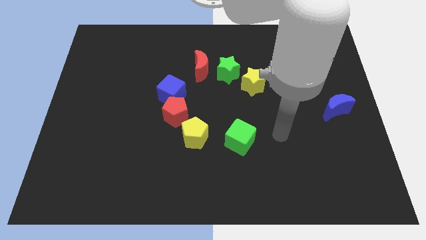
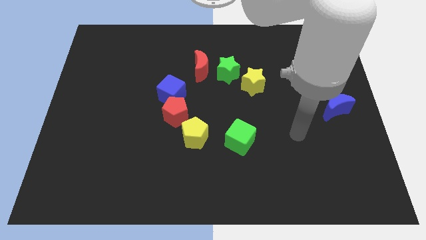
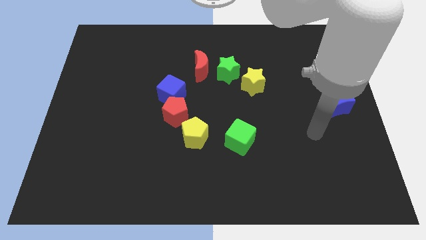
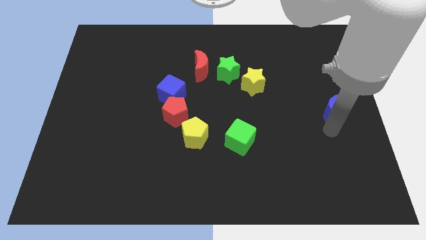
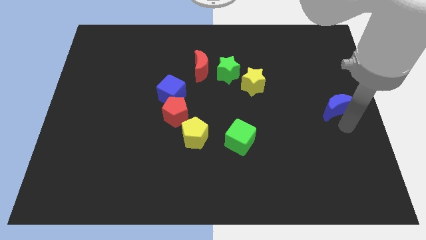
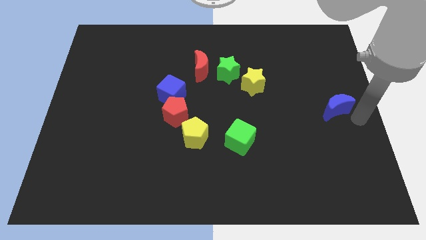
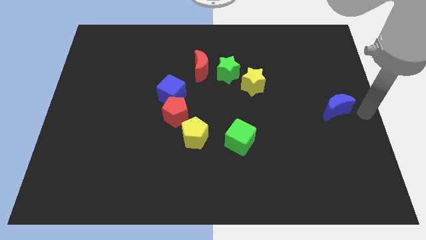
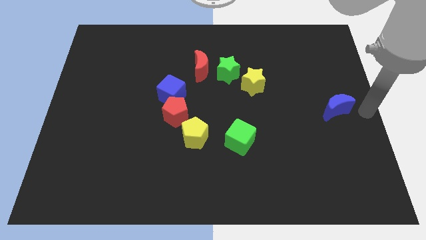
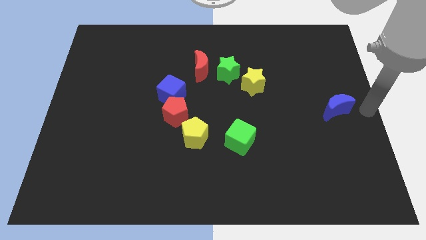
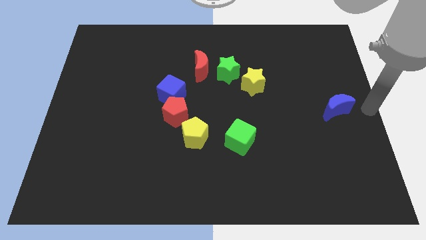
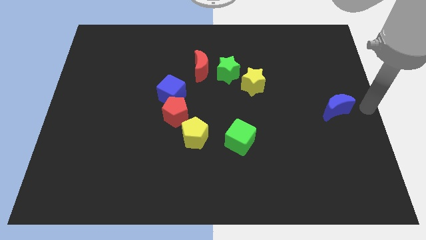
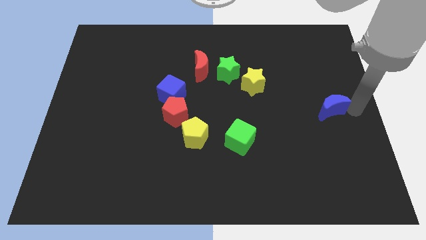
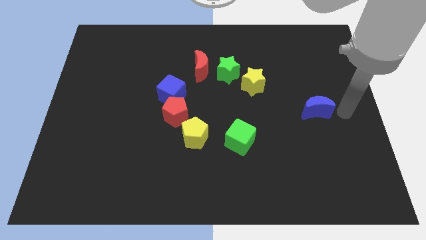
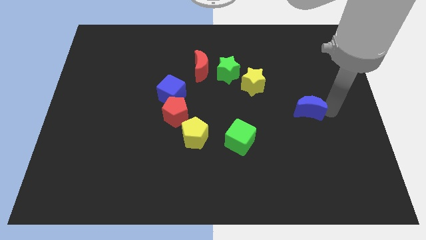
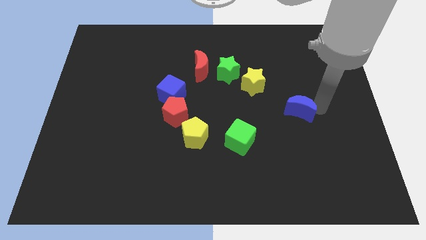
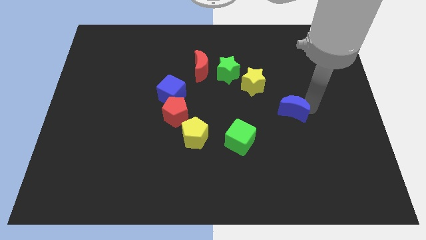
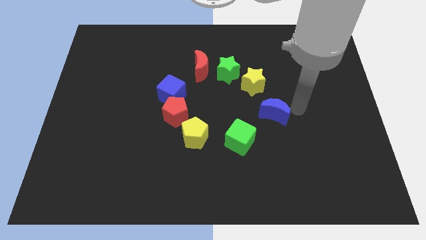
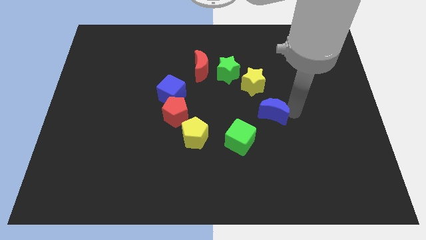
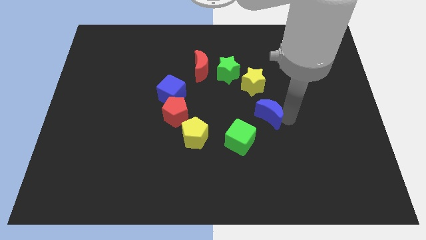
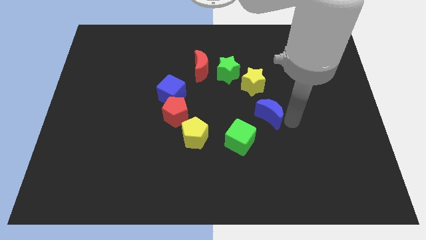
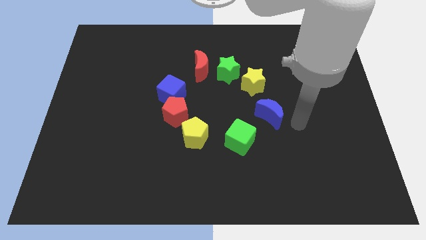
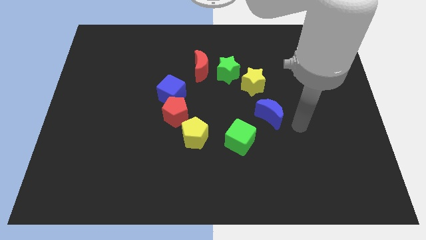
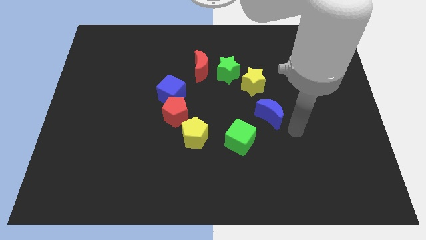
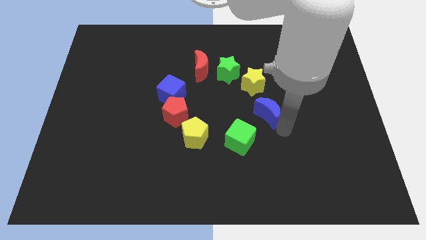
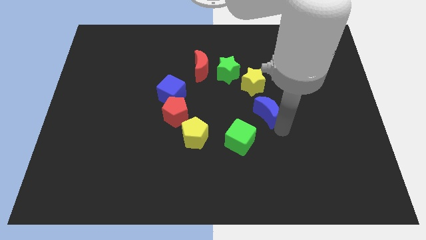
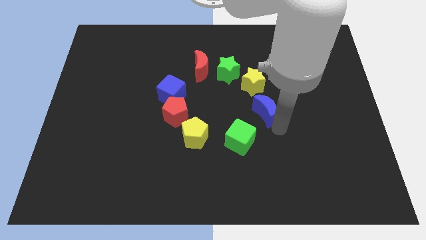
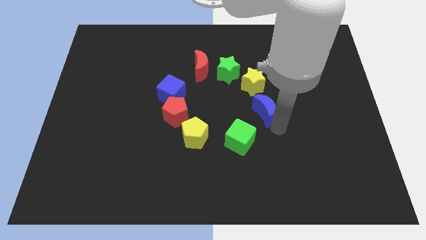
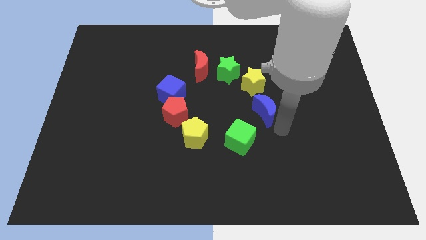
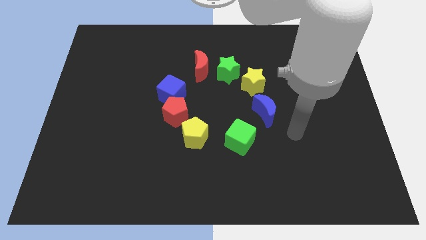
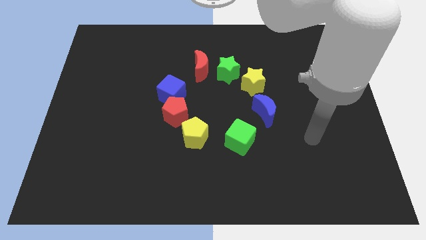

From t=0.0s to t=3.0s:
push the blue crescent towards the top left corner of the green cube

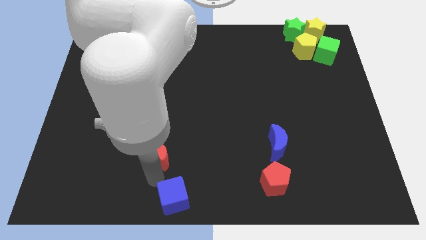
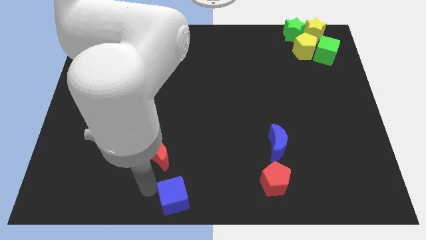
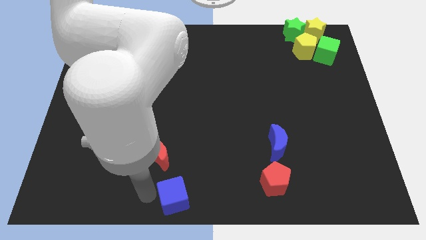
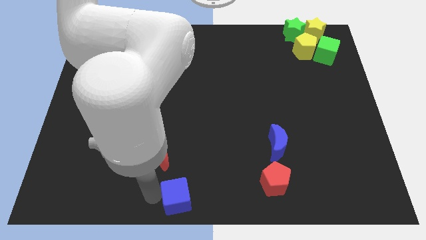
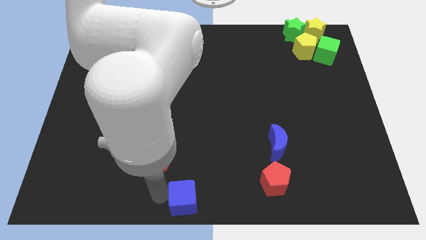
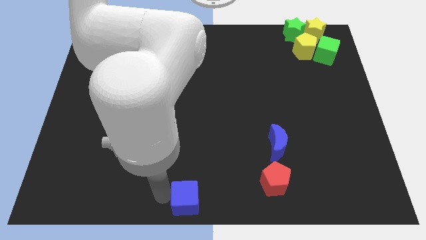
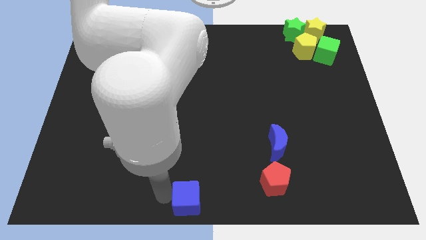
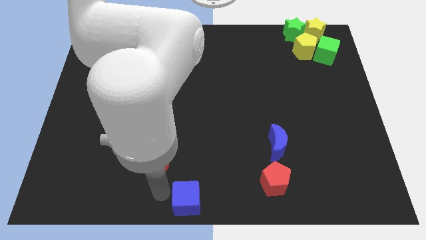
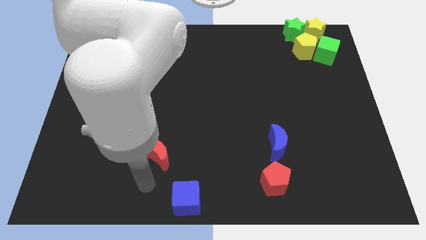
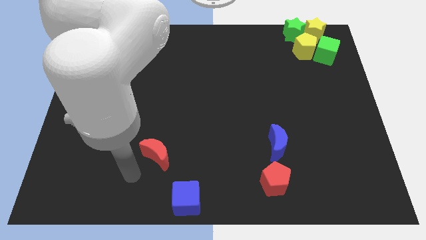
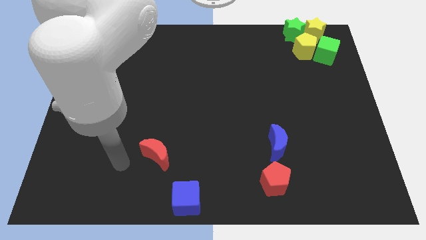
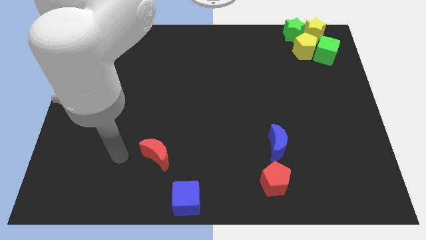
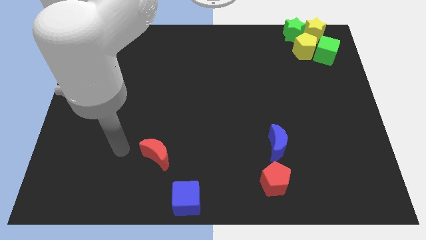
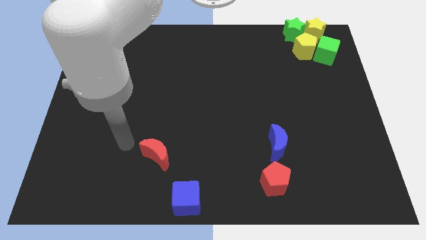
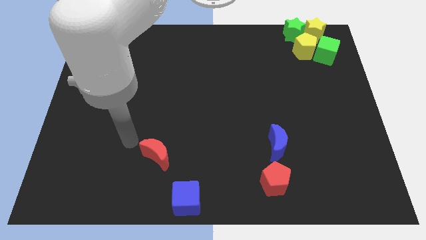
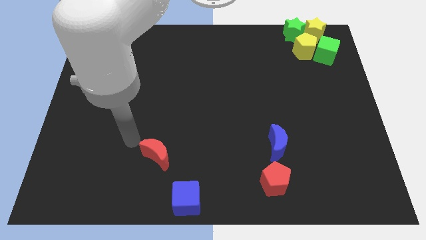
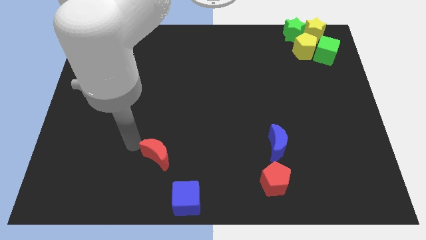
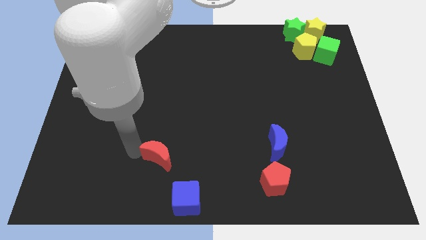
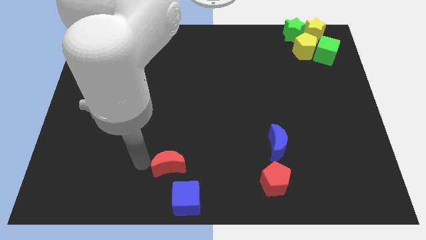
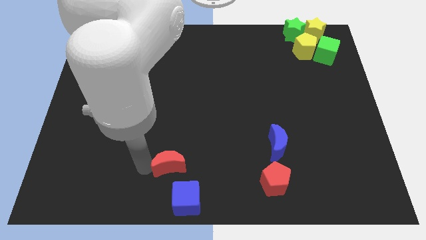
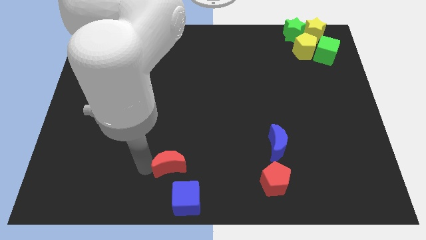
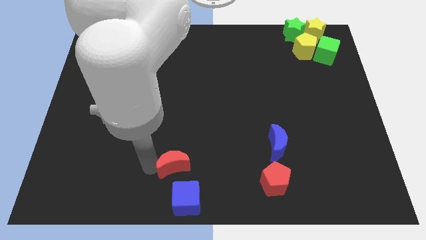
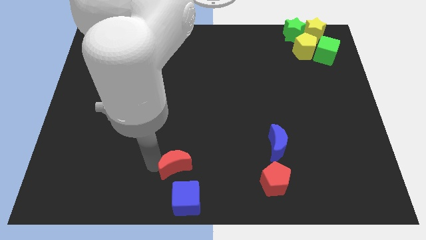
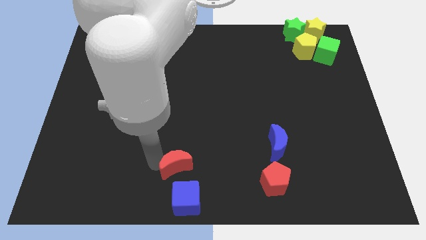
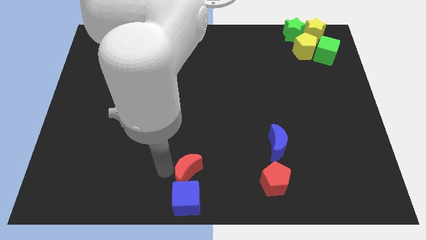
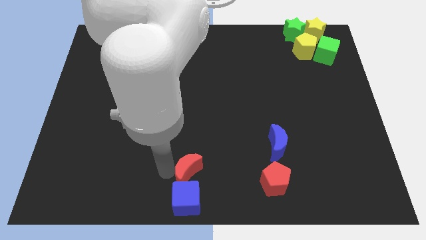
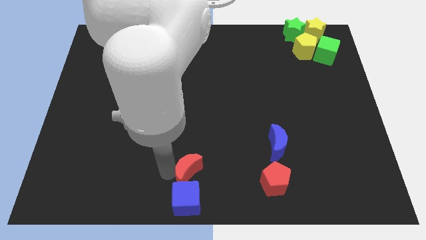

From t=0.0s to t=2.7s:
push red crescent above blue cube

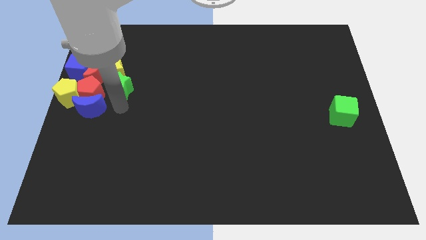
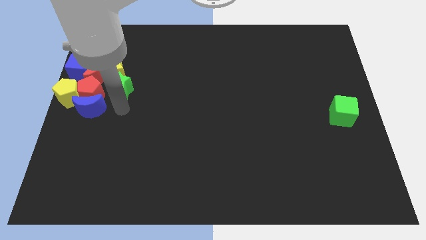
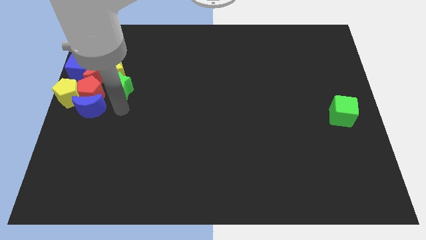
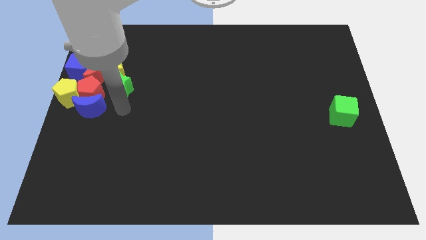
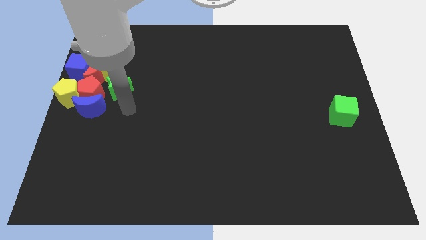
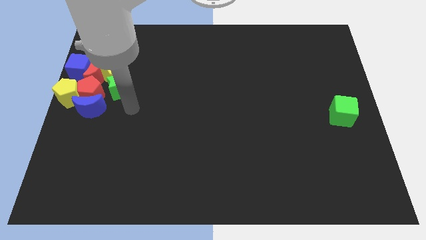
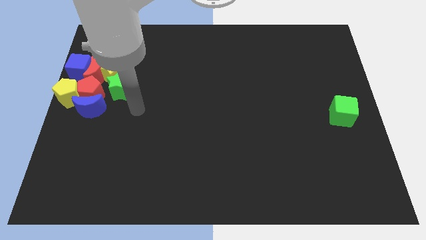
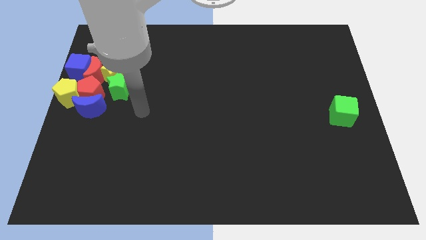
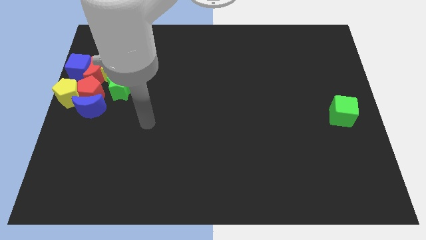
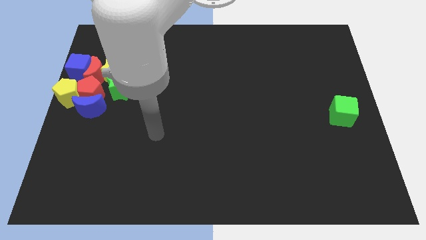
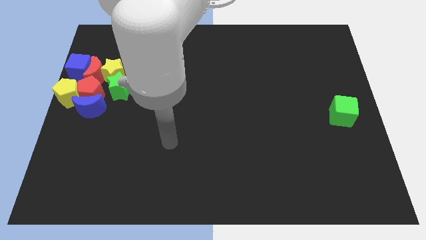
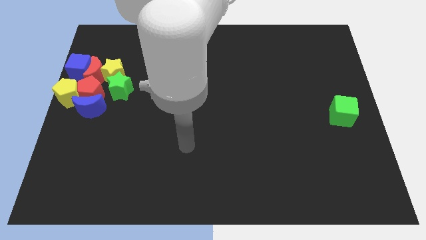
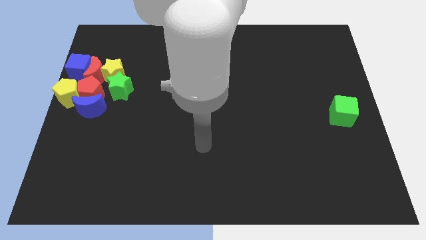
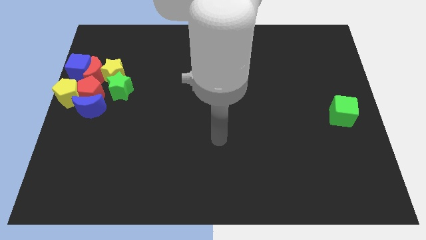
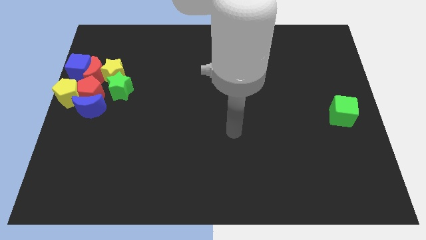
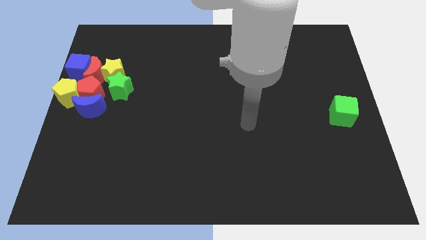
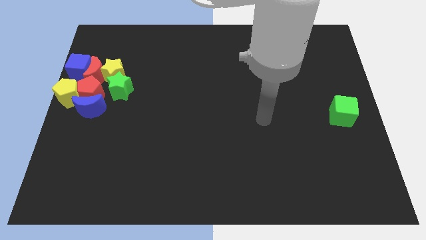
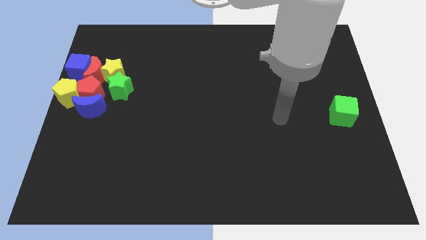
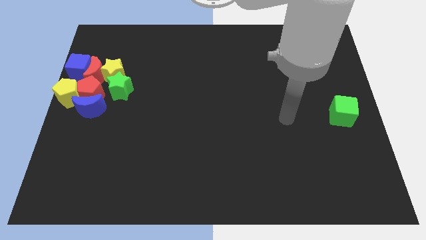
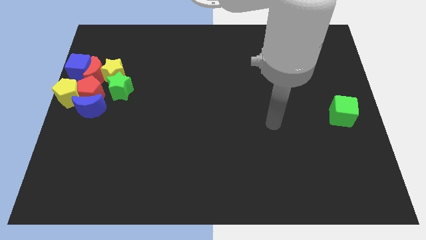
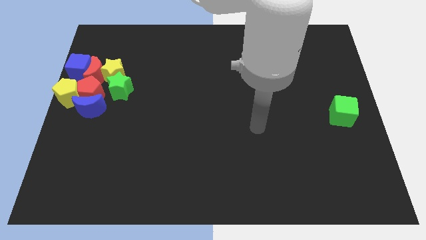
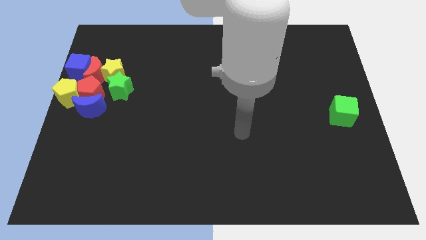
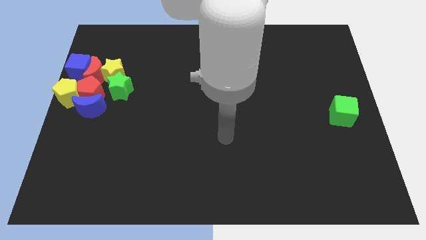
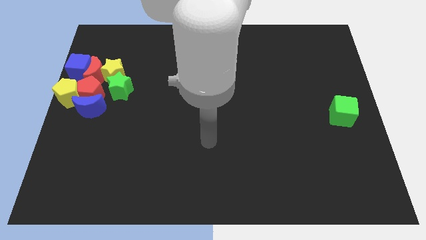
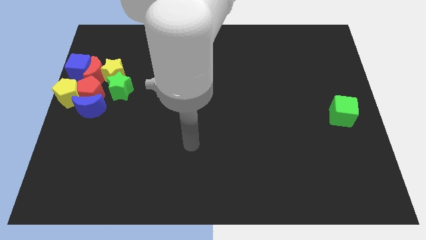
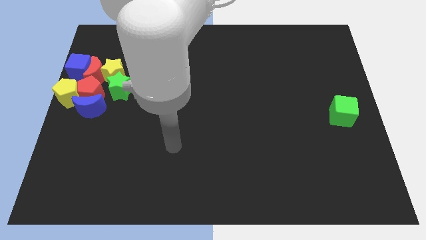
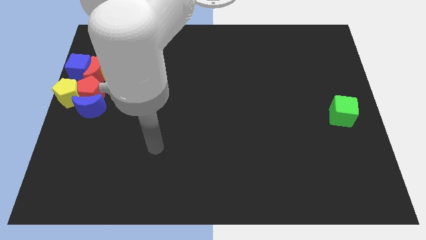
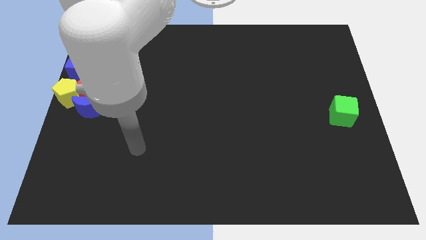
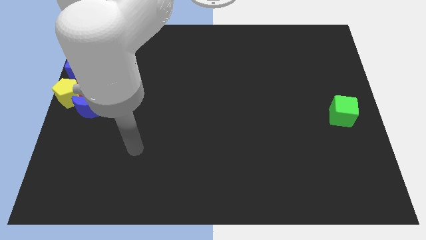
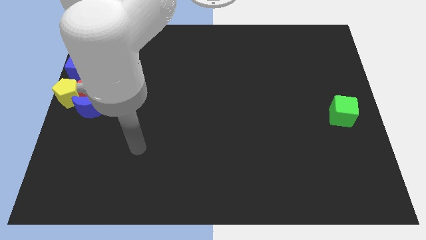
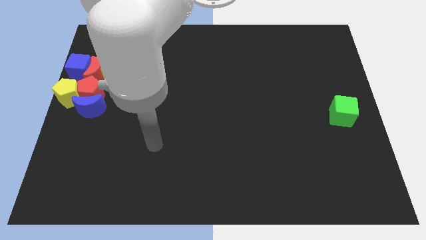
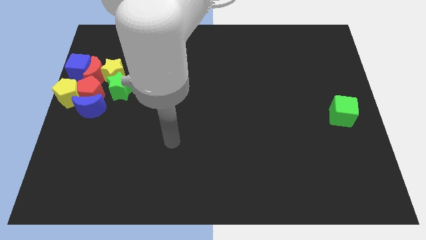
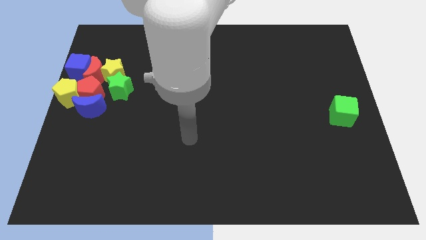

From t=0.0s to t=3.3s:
move your arm away from the green star
